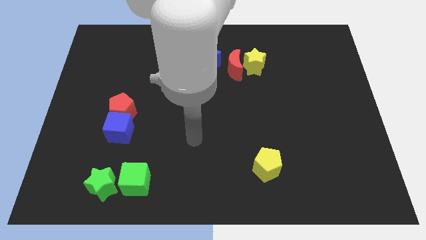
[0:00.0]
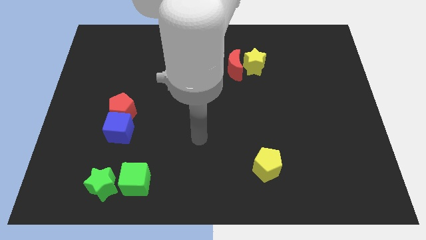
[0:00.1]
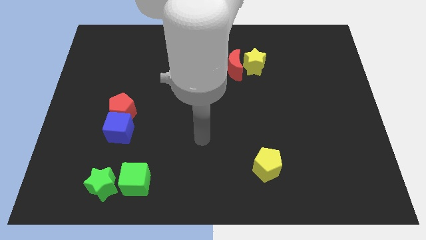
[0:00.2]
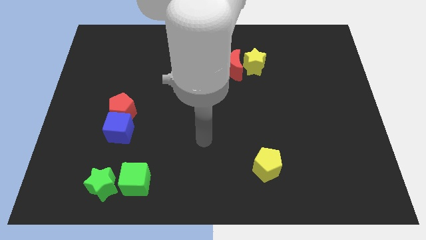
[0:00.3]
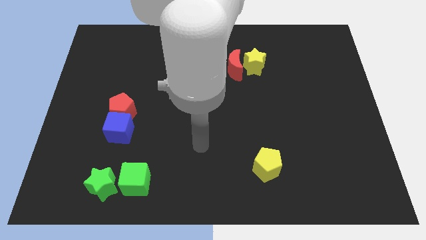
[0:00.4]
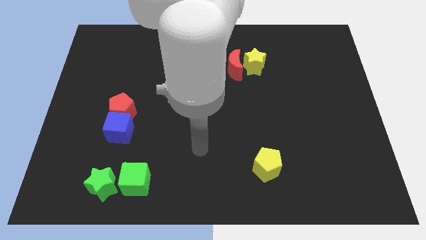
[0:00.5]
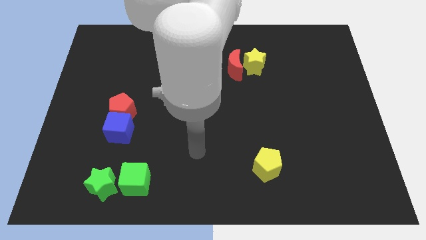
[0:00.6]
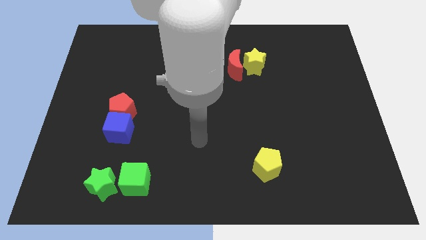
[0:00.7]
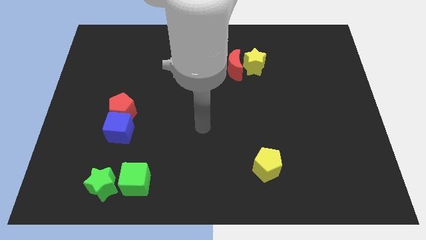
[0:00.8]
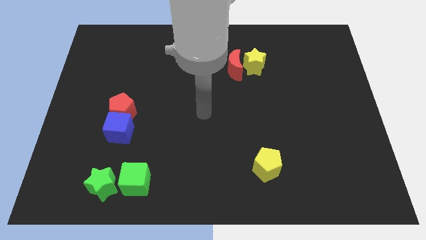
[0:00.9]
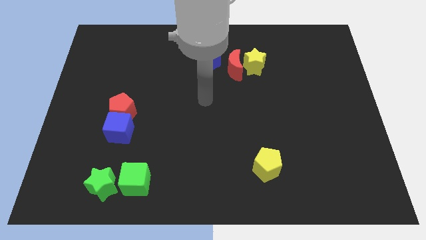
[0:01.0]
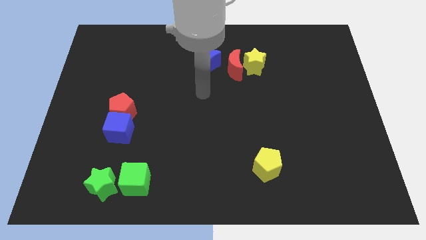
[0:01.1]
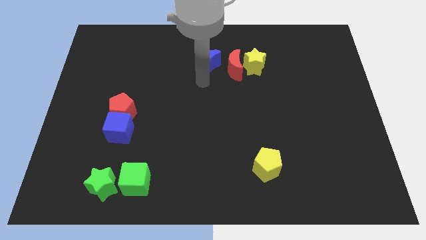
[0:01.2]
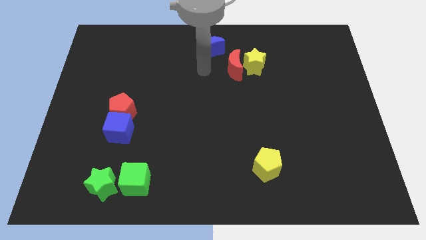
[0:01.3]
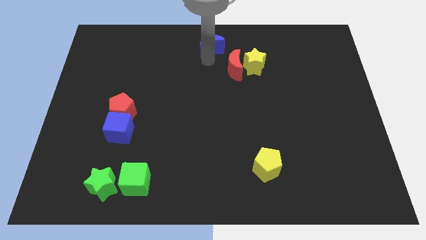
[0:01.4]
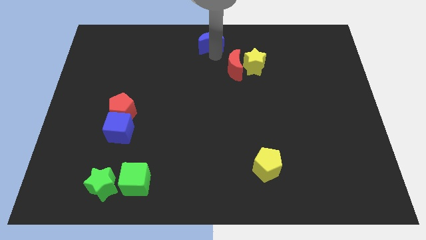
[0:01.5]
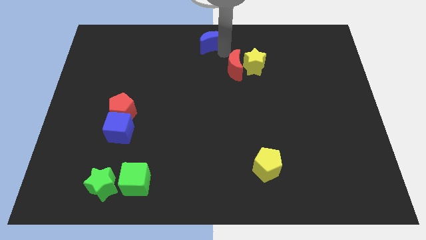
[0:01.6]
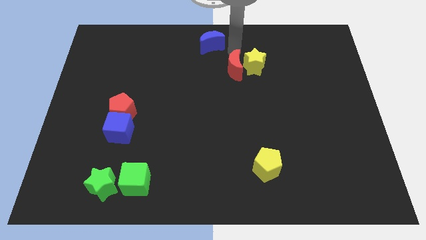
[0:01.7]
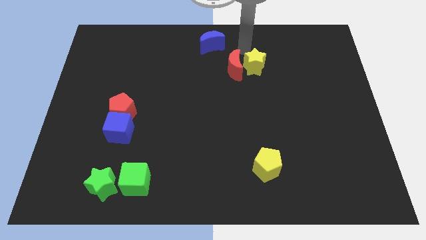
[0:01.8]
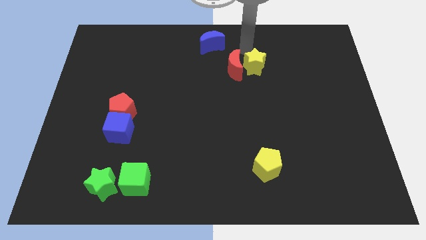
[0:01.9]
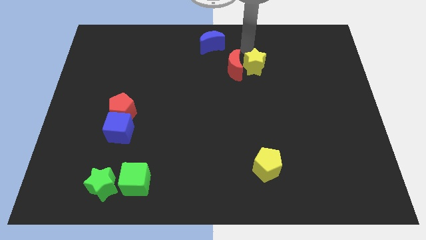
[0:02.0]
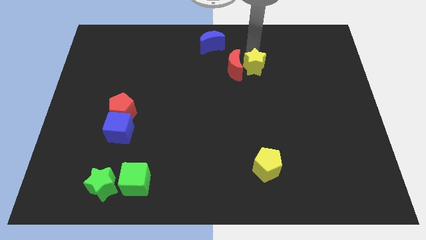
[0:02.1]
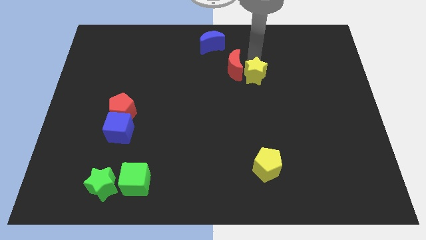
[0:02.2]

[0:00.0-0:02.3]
push the blue moon to the top center

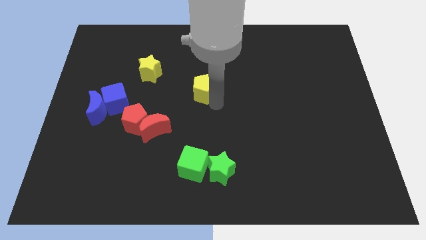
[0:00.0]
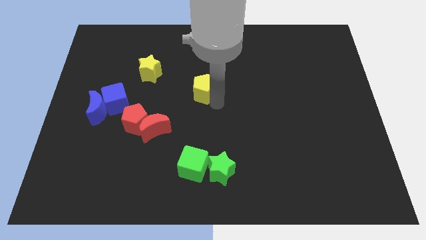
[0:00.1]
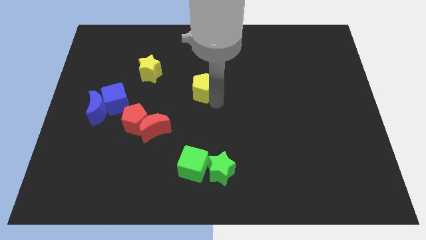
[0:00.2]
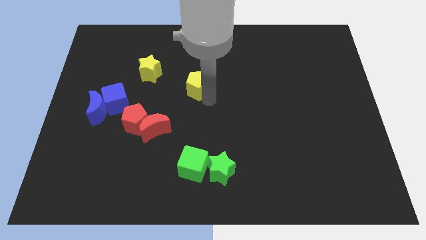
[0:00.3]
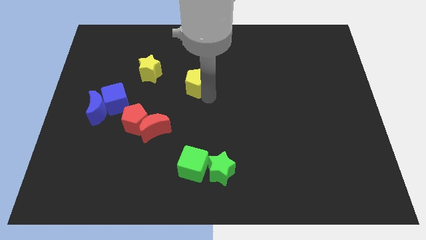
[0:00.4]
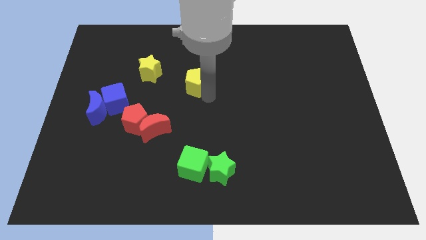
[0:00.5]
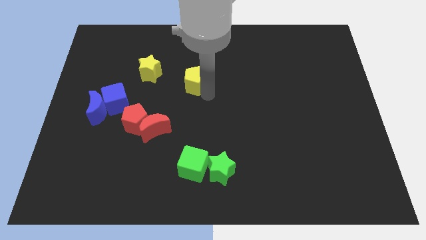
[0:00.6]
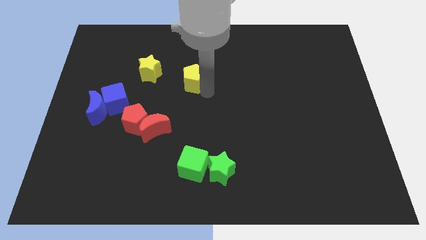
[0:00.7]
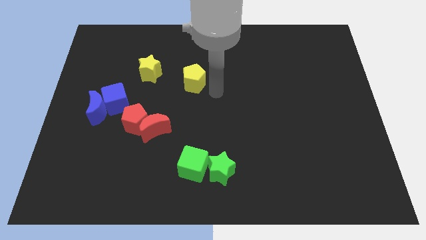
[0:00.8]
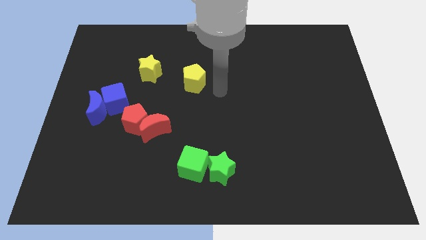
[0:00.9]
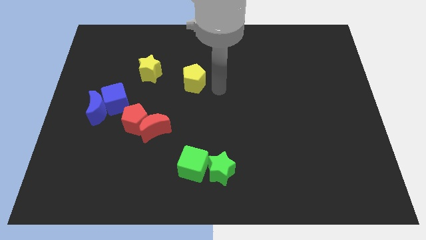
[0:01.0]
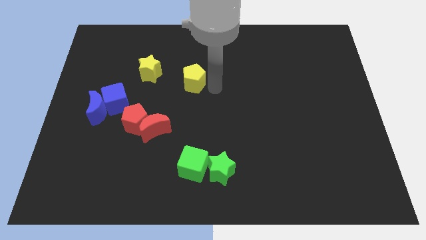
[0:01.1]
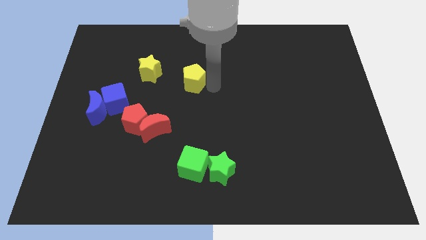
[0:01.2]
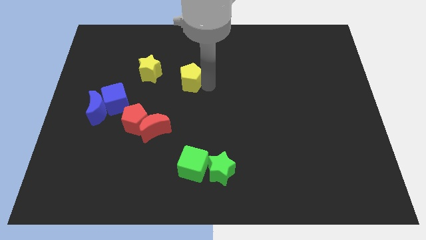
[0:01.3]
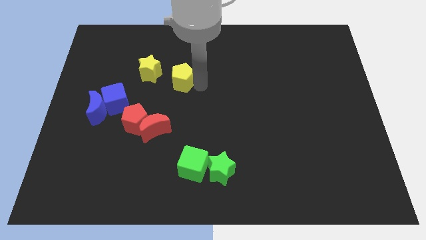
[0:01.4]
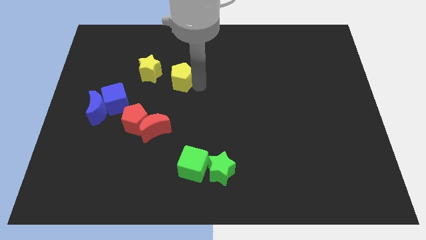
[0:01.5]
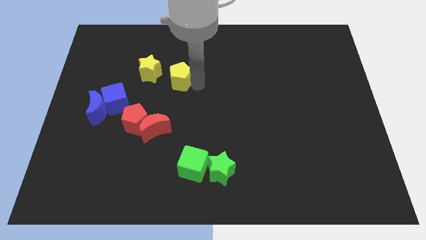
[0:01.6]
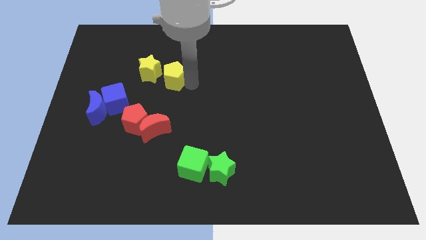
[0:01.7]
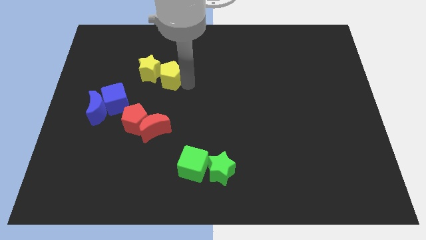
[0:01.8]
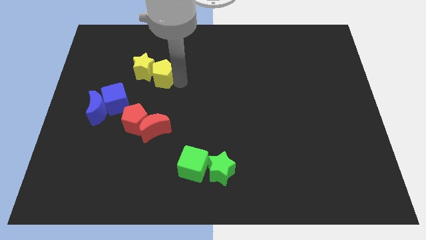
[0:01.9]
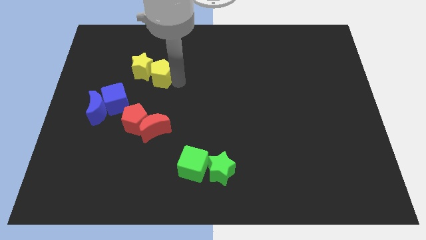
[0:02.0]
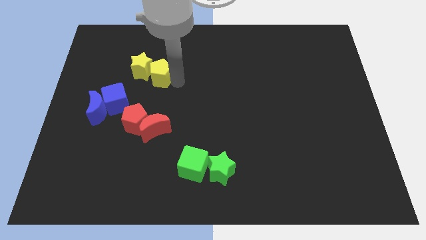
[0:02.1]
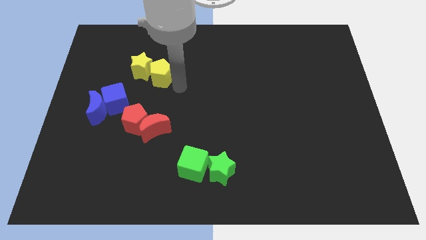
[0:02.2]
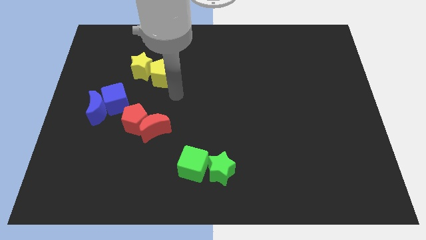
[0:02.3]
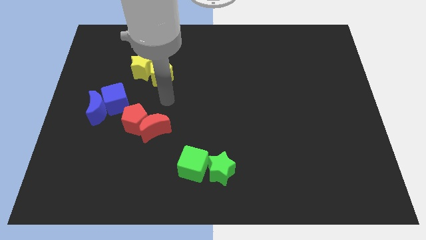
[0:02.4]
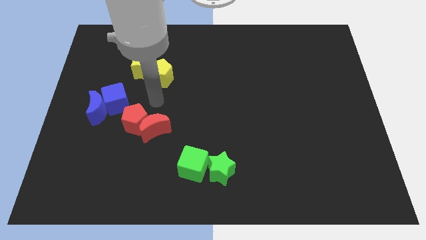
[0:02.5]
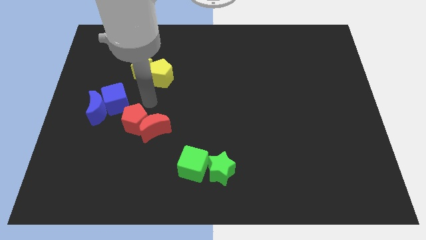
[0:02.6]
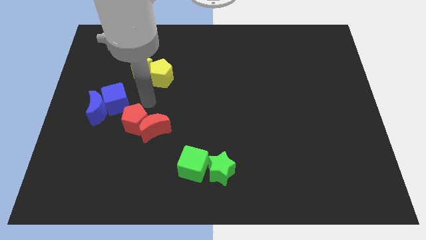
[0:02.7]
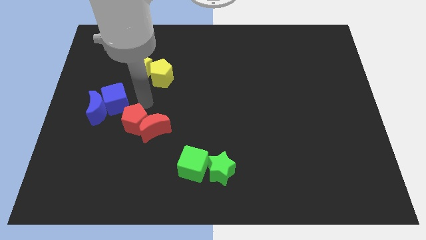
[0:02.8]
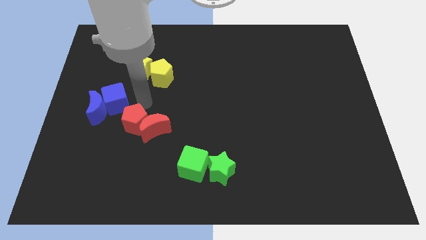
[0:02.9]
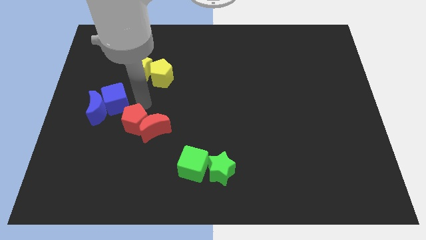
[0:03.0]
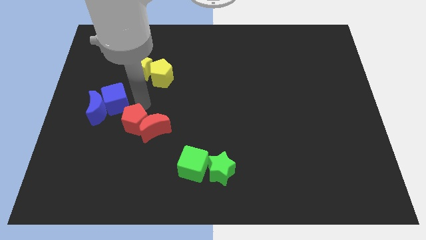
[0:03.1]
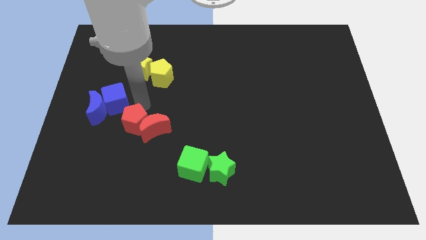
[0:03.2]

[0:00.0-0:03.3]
move the yellow pentagon into the yellow star

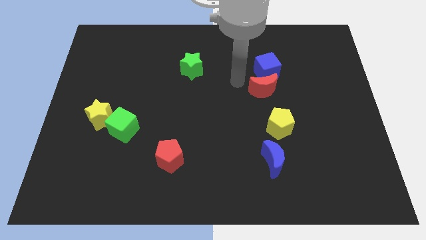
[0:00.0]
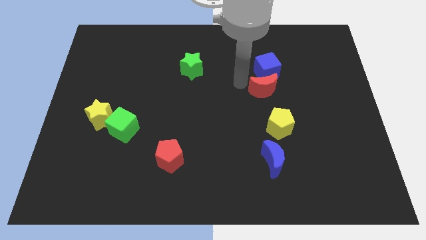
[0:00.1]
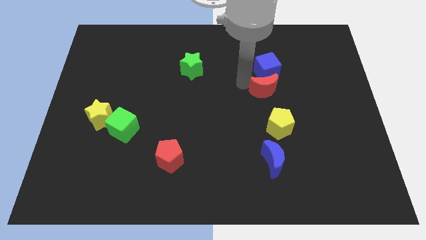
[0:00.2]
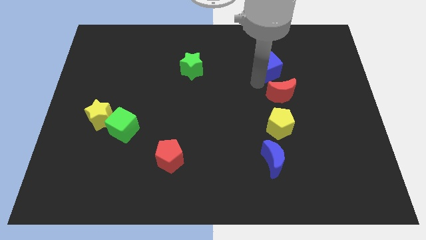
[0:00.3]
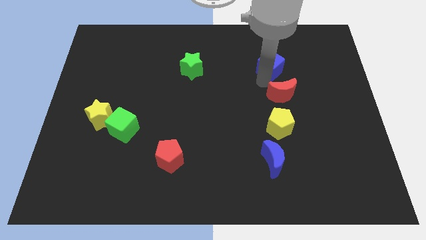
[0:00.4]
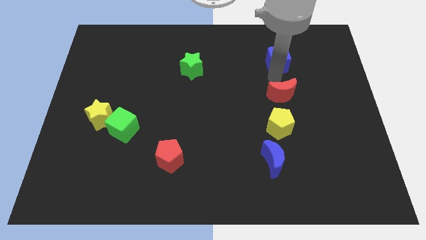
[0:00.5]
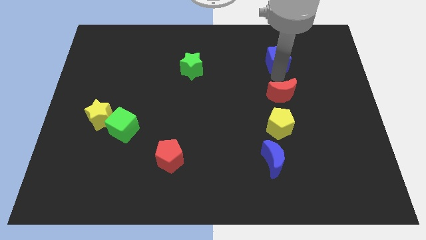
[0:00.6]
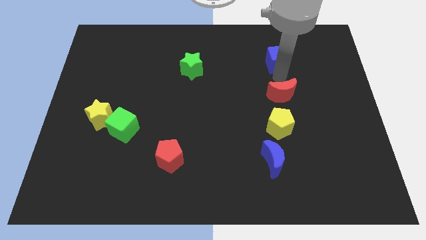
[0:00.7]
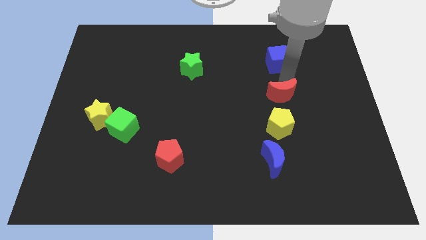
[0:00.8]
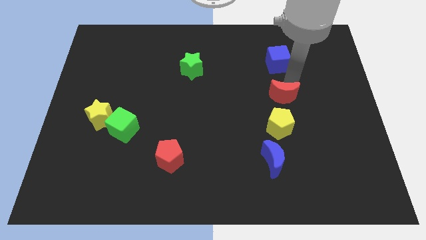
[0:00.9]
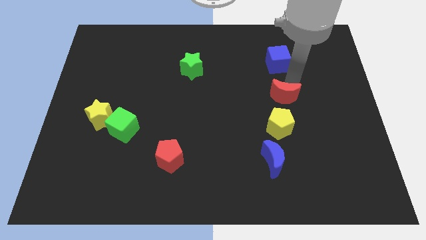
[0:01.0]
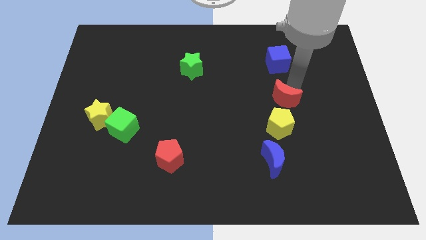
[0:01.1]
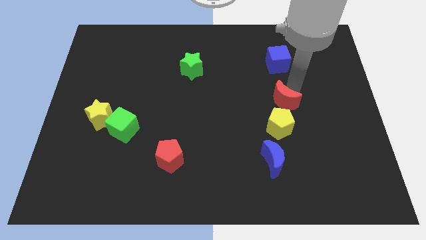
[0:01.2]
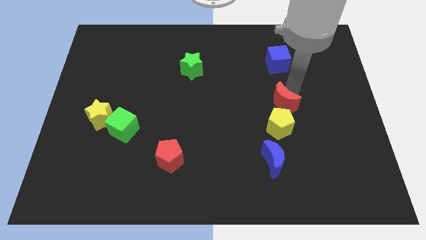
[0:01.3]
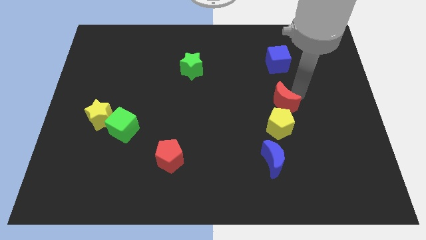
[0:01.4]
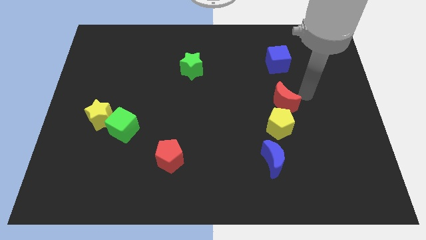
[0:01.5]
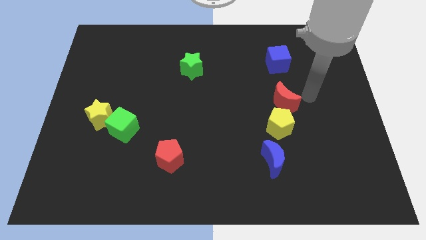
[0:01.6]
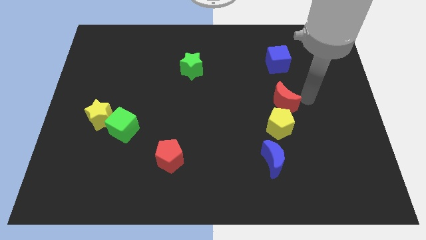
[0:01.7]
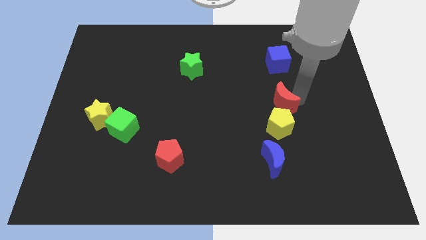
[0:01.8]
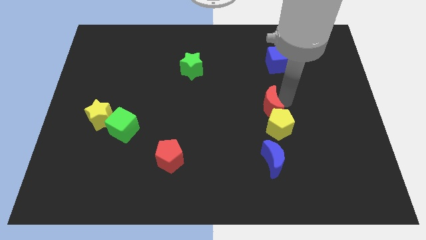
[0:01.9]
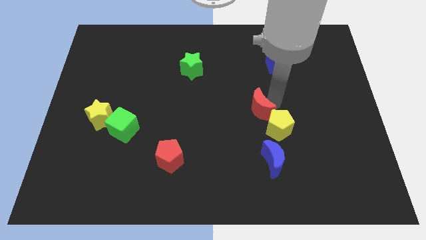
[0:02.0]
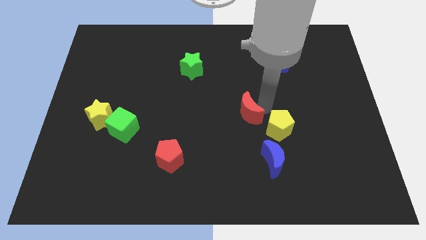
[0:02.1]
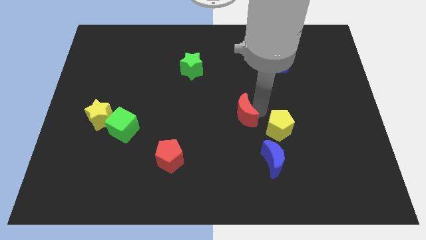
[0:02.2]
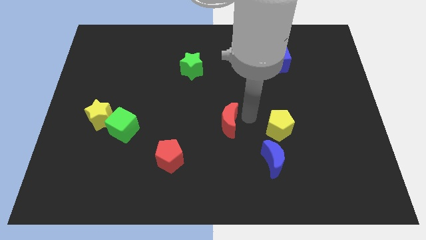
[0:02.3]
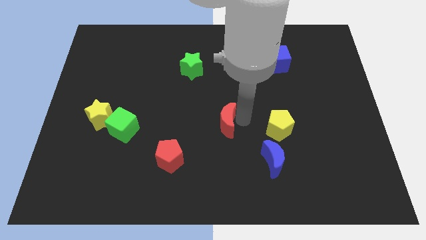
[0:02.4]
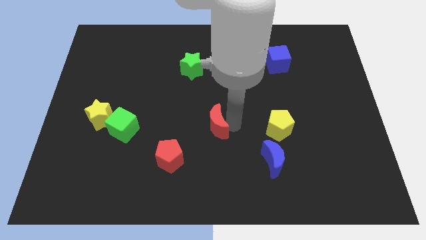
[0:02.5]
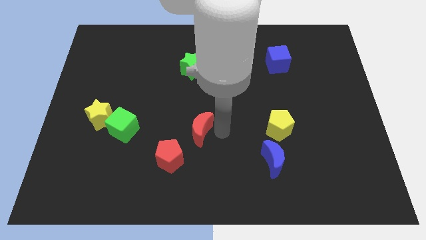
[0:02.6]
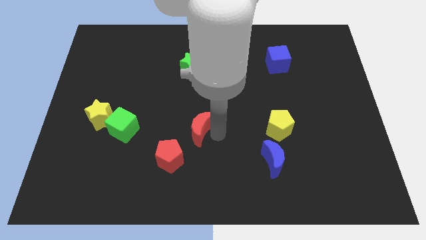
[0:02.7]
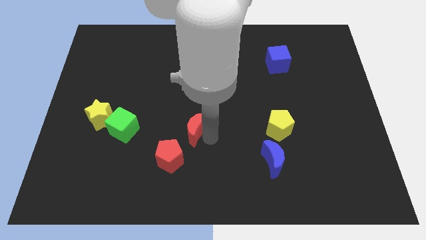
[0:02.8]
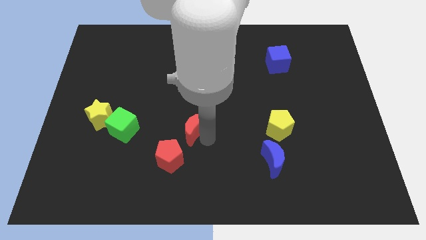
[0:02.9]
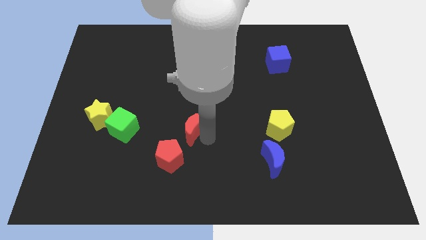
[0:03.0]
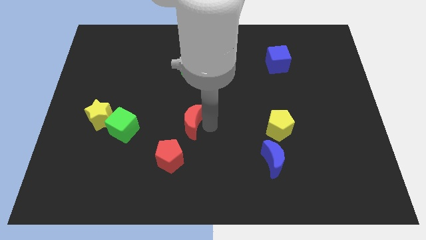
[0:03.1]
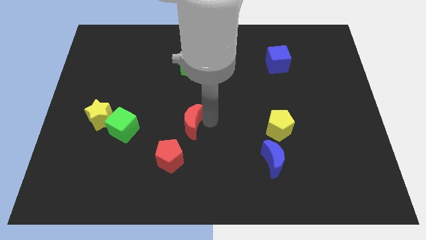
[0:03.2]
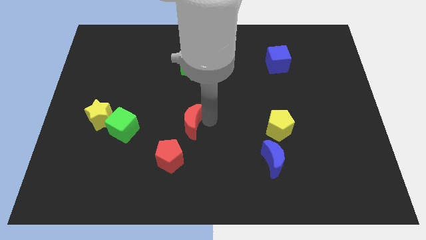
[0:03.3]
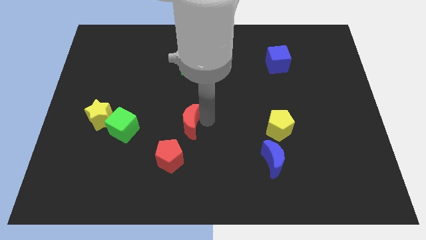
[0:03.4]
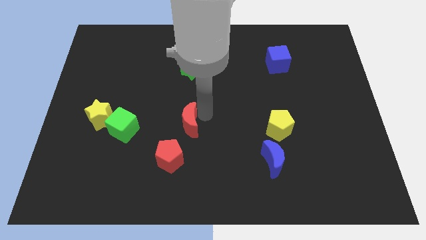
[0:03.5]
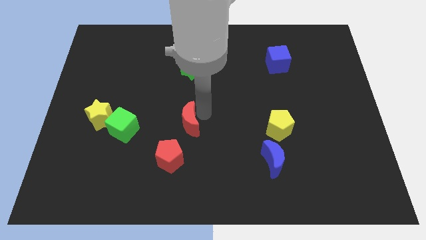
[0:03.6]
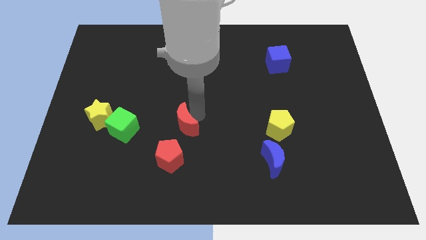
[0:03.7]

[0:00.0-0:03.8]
place the red moon in parallel with the green cube
